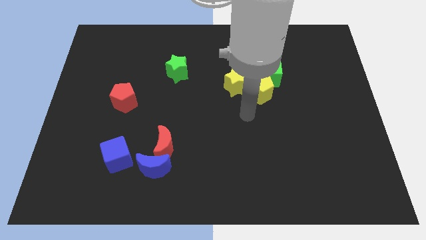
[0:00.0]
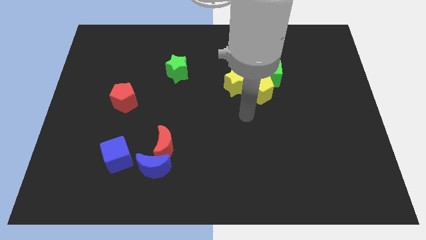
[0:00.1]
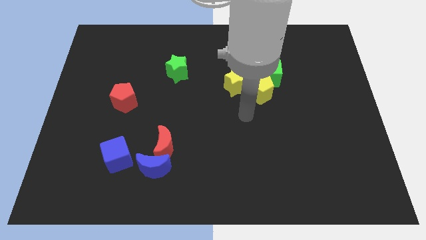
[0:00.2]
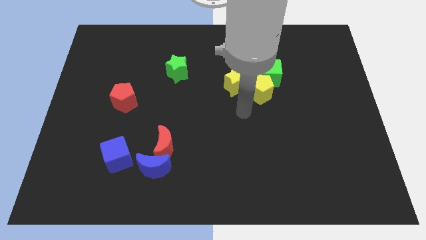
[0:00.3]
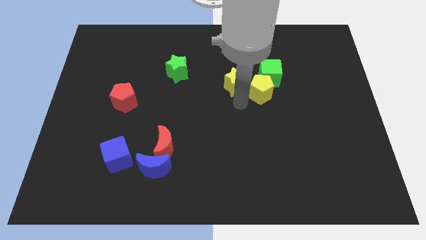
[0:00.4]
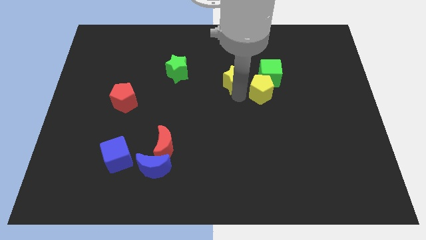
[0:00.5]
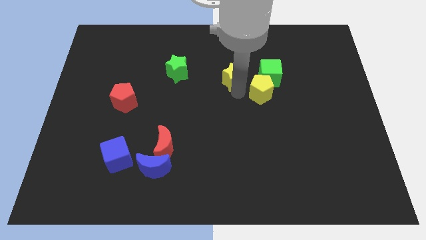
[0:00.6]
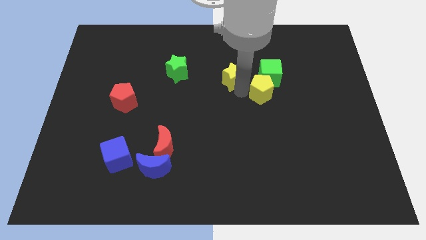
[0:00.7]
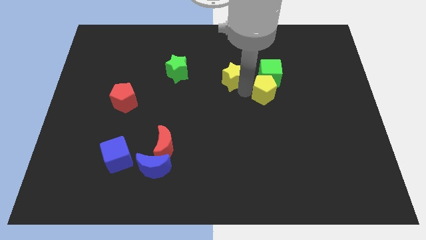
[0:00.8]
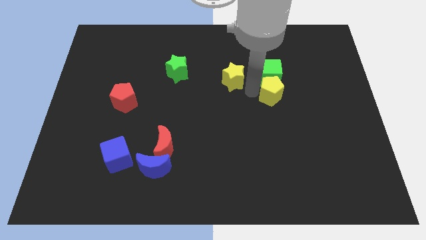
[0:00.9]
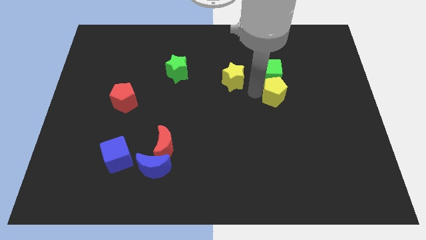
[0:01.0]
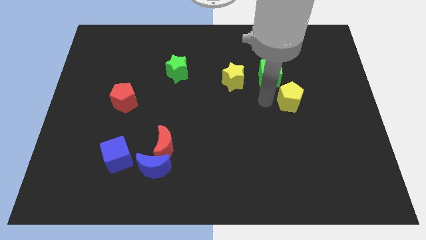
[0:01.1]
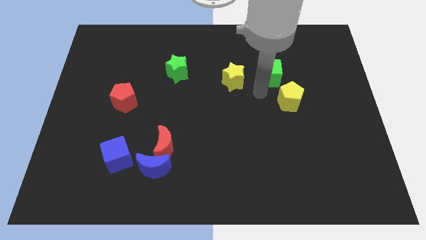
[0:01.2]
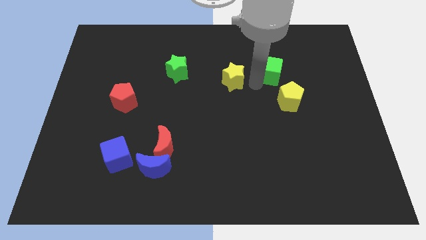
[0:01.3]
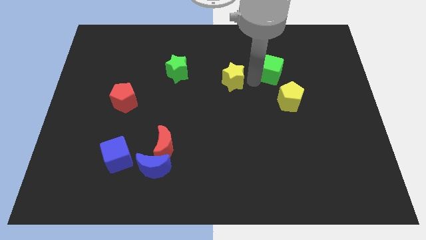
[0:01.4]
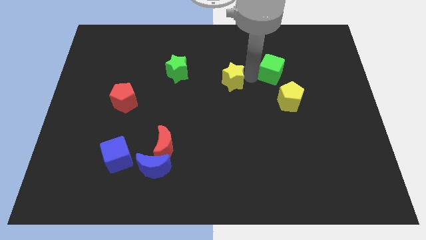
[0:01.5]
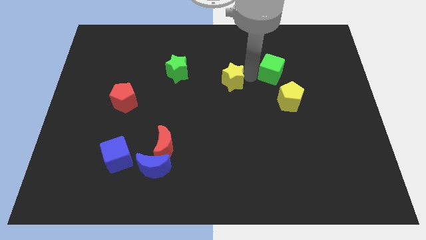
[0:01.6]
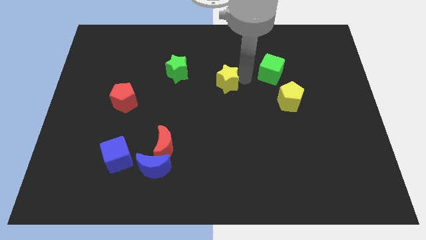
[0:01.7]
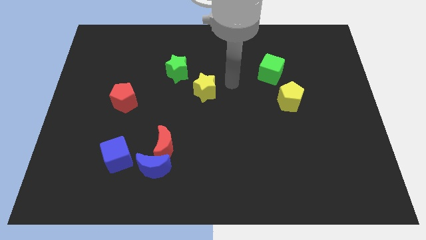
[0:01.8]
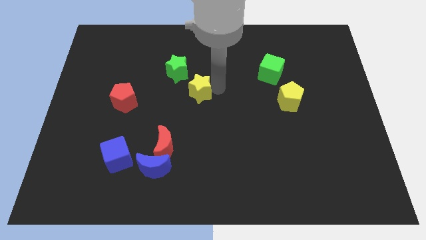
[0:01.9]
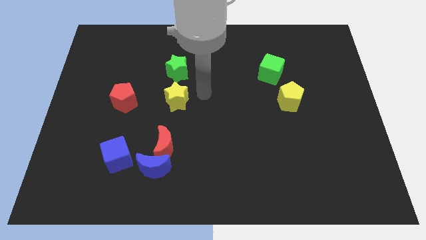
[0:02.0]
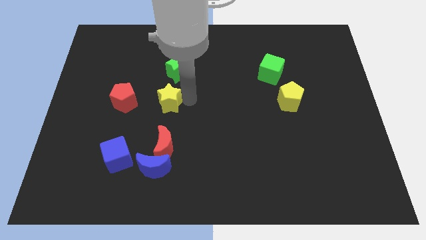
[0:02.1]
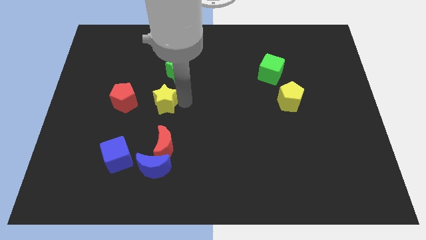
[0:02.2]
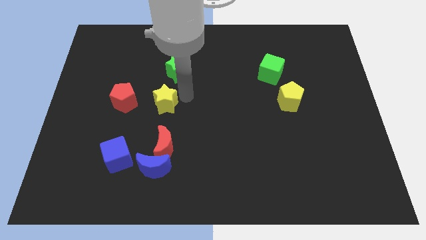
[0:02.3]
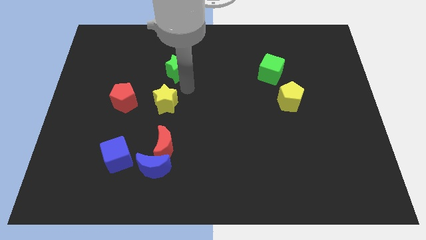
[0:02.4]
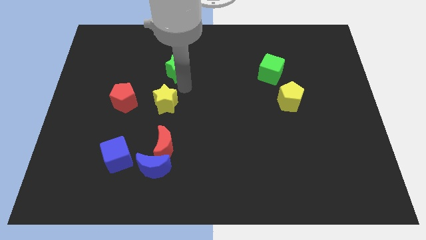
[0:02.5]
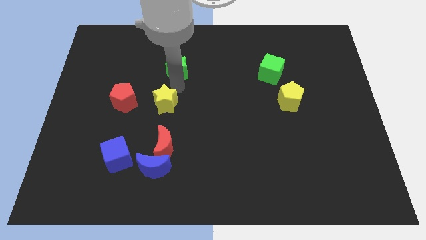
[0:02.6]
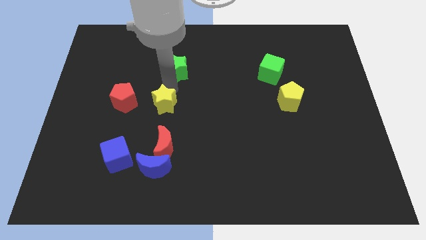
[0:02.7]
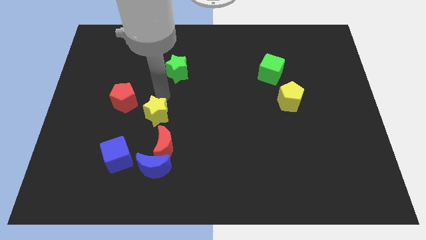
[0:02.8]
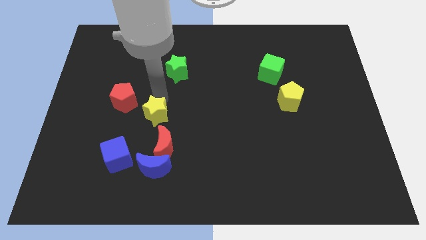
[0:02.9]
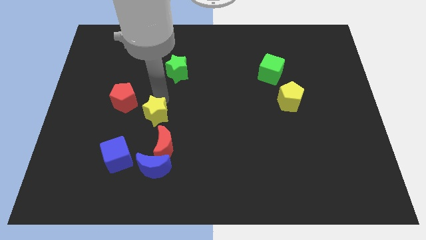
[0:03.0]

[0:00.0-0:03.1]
separate yellow blocks from each other

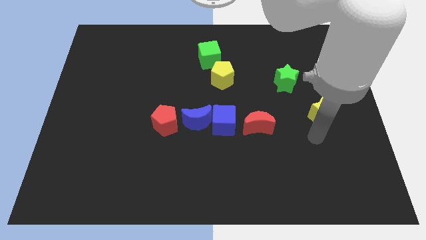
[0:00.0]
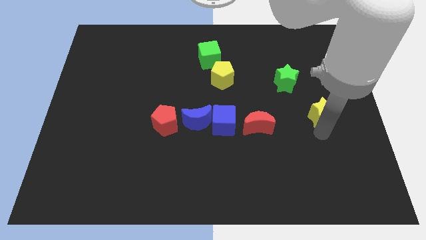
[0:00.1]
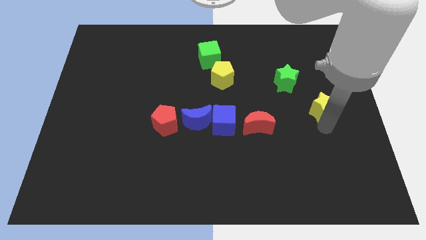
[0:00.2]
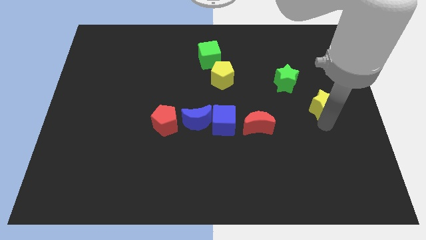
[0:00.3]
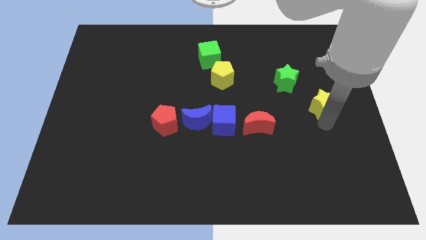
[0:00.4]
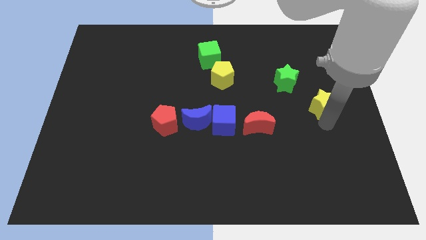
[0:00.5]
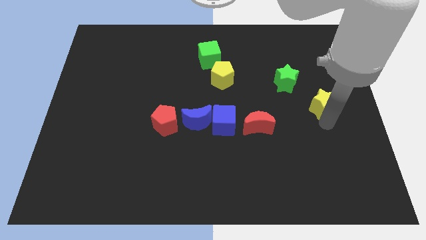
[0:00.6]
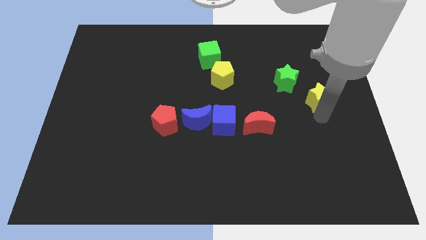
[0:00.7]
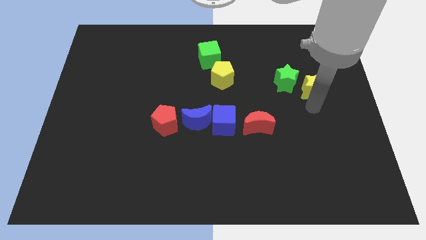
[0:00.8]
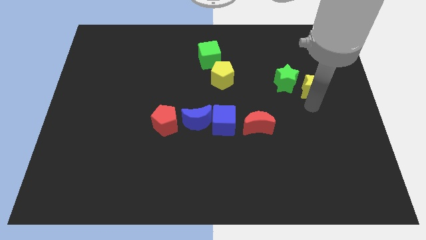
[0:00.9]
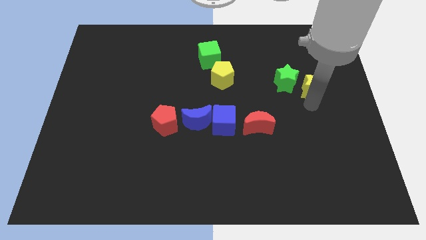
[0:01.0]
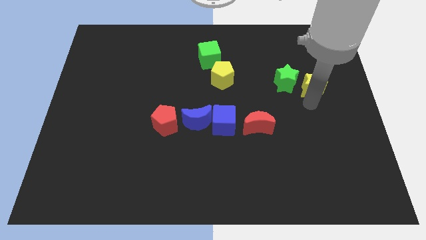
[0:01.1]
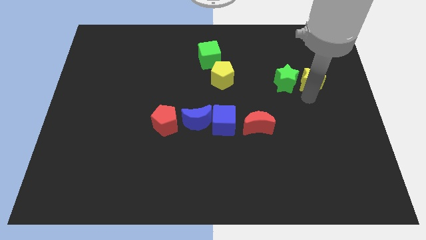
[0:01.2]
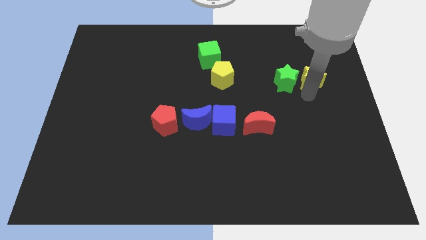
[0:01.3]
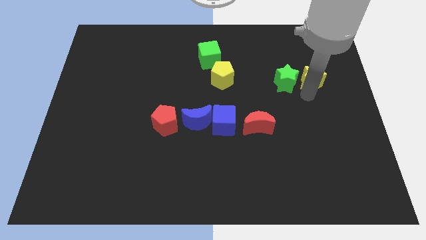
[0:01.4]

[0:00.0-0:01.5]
move the yellow star to the right side of the green star

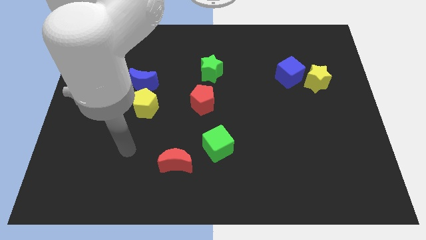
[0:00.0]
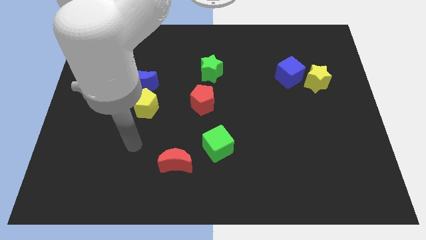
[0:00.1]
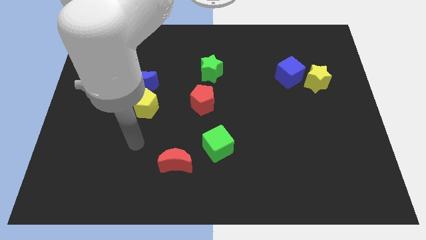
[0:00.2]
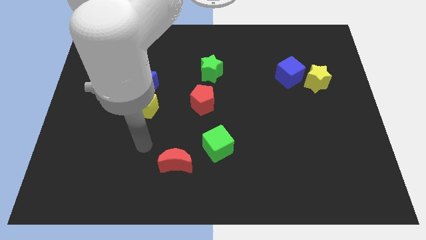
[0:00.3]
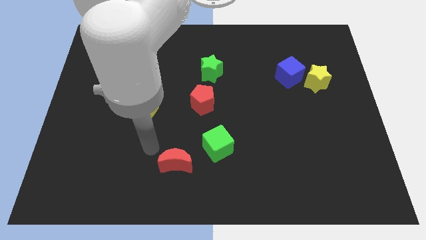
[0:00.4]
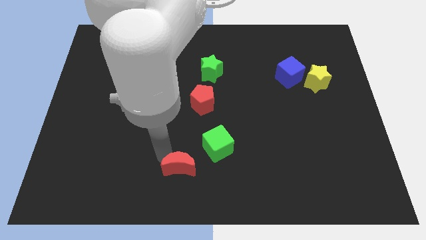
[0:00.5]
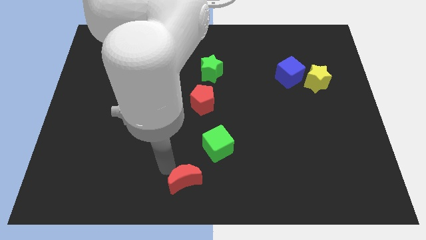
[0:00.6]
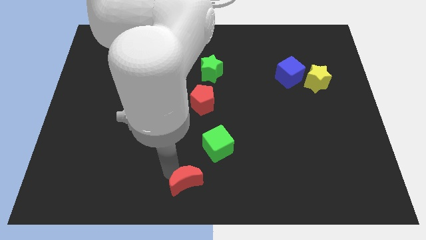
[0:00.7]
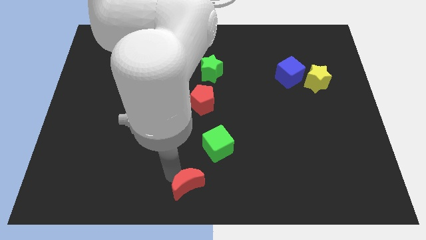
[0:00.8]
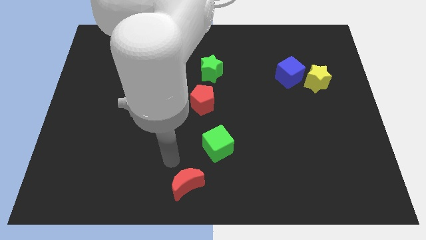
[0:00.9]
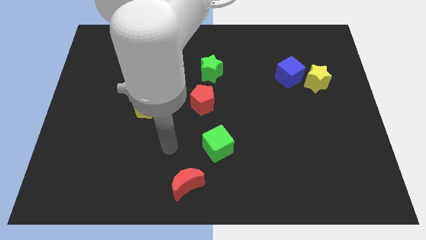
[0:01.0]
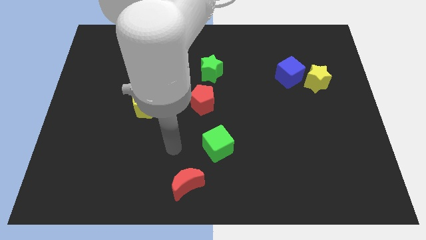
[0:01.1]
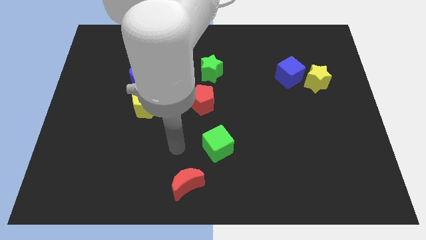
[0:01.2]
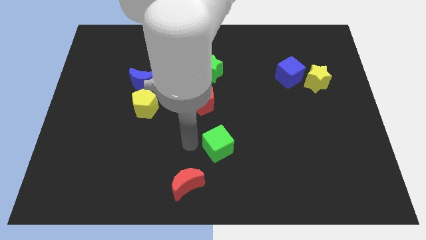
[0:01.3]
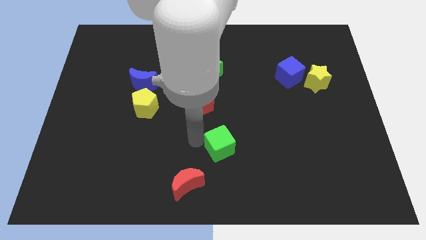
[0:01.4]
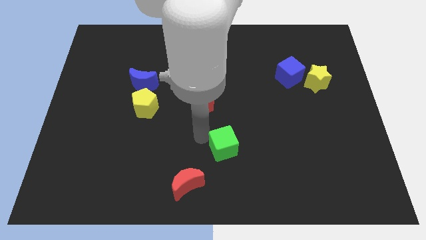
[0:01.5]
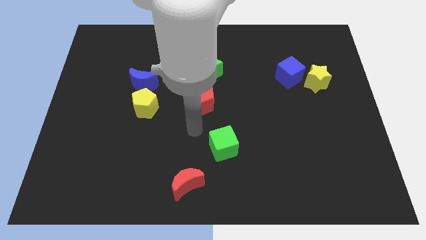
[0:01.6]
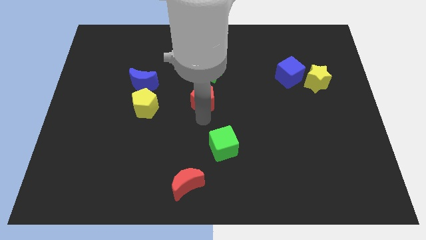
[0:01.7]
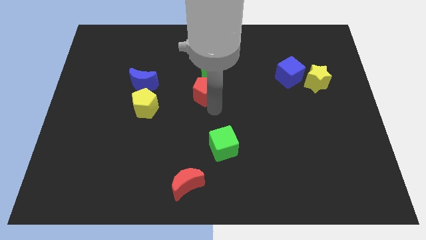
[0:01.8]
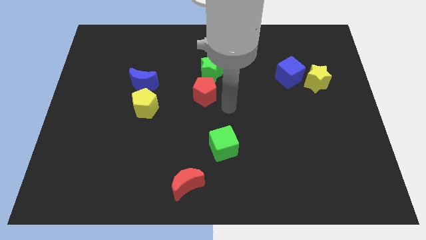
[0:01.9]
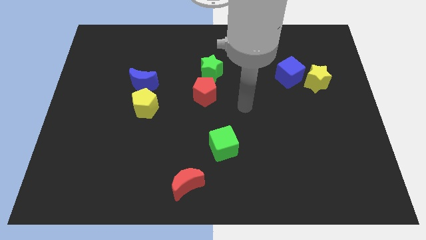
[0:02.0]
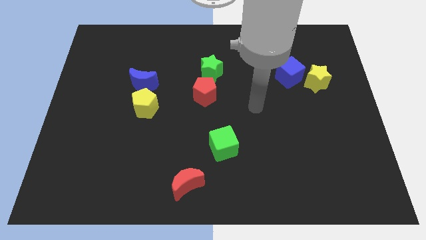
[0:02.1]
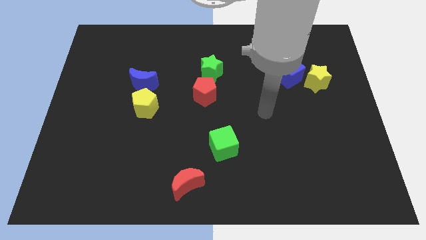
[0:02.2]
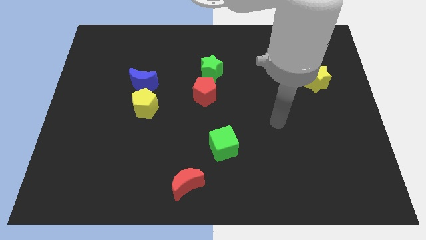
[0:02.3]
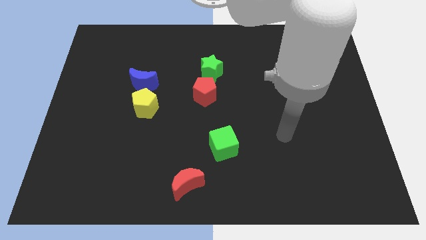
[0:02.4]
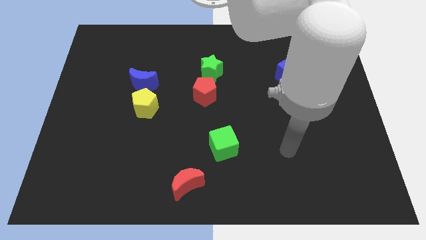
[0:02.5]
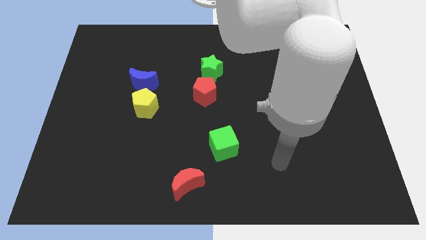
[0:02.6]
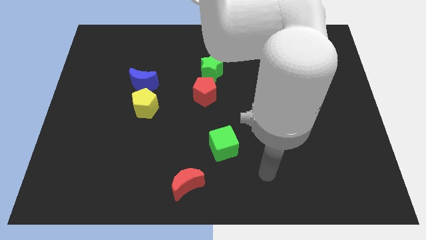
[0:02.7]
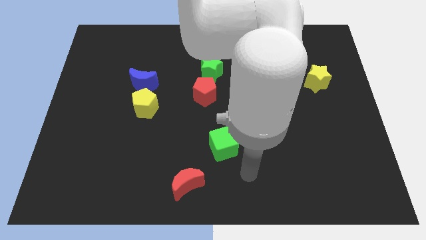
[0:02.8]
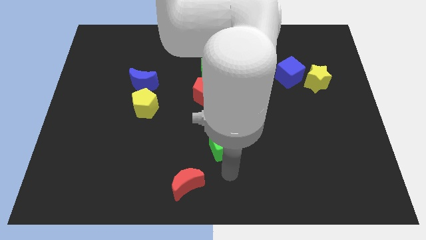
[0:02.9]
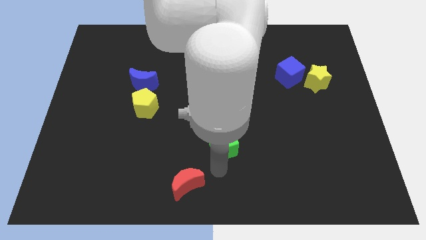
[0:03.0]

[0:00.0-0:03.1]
place the green cube diagonally to the red crescent

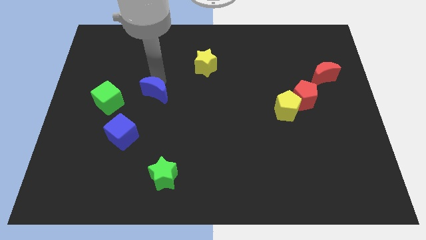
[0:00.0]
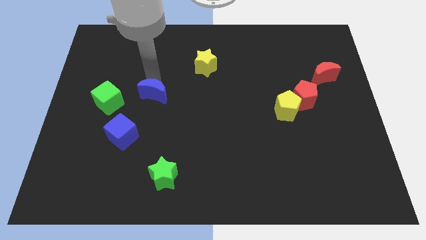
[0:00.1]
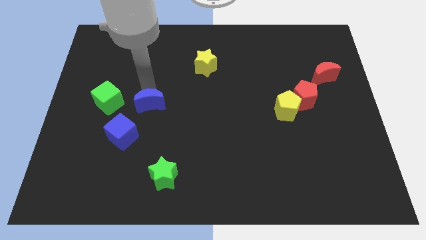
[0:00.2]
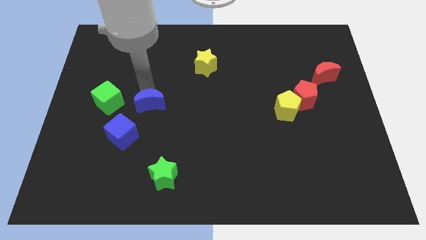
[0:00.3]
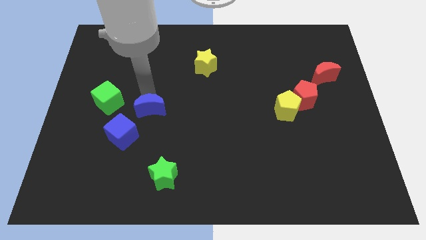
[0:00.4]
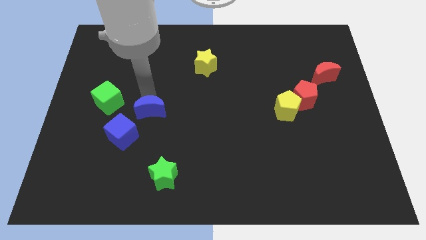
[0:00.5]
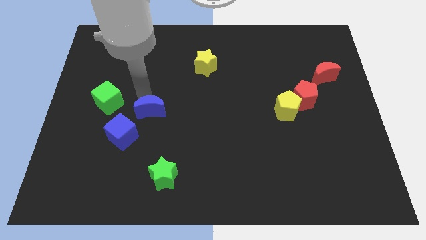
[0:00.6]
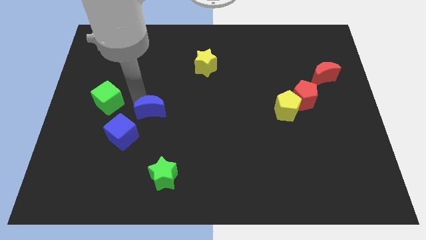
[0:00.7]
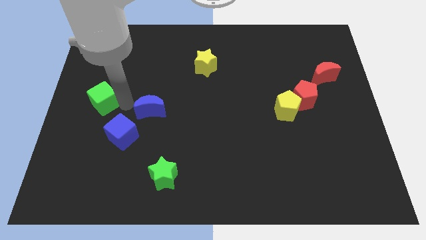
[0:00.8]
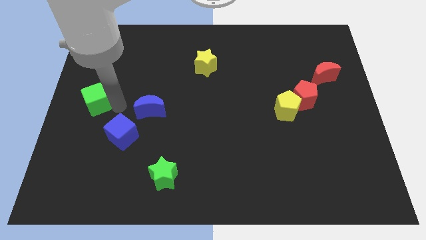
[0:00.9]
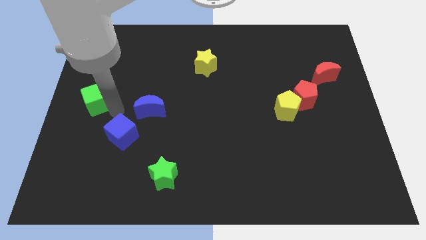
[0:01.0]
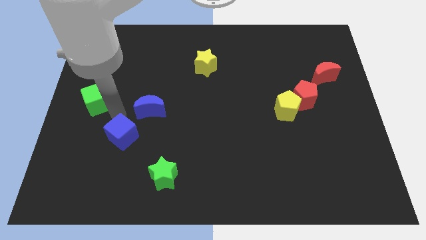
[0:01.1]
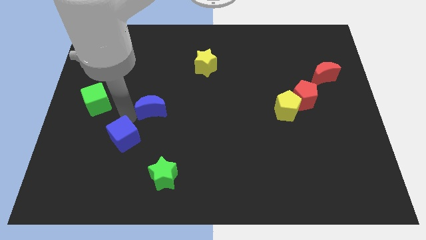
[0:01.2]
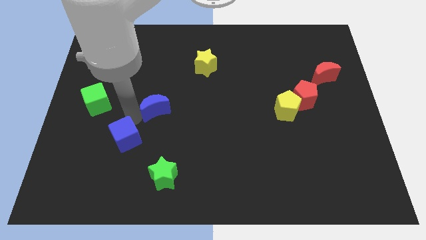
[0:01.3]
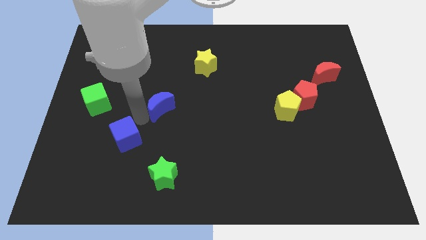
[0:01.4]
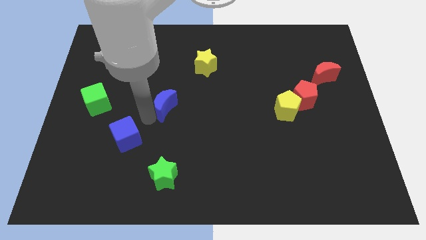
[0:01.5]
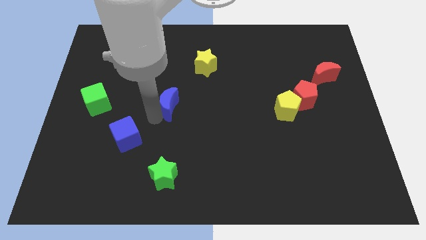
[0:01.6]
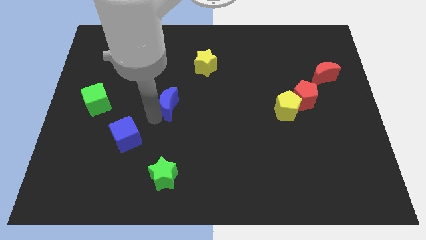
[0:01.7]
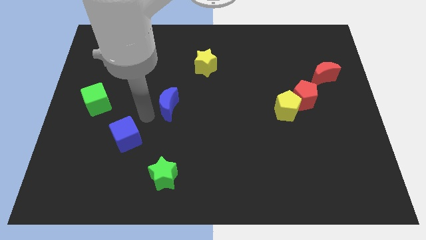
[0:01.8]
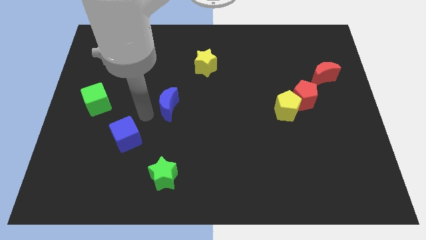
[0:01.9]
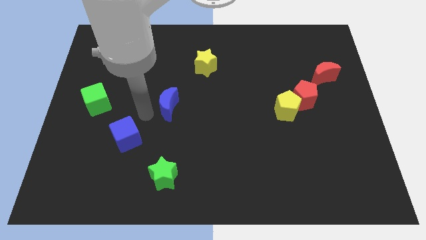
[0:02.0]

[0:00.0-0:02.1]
seperate green cube and blue moon
